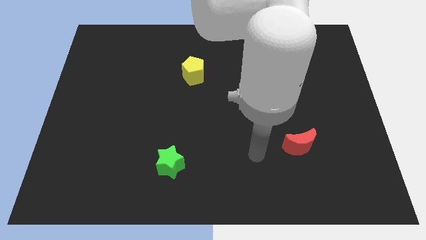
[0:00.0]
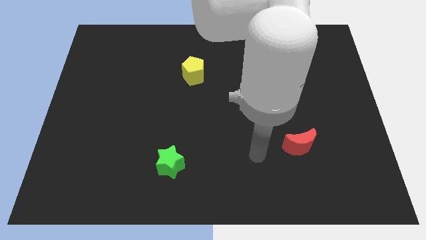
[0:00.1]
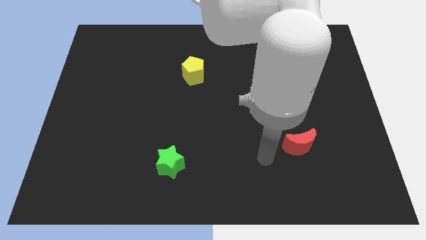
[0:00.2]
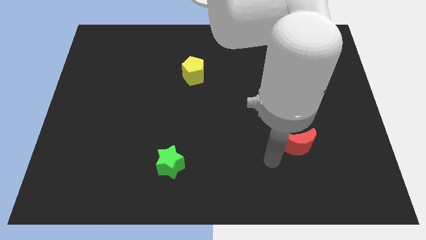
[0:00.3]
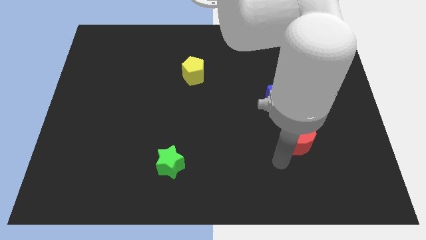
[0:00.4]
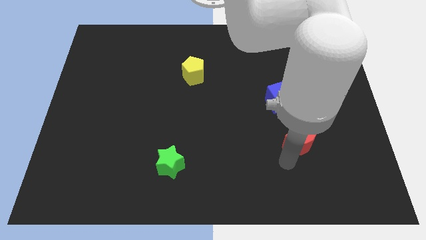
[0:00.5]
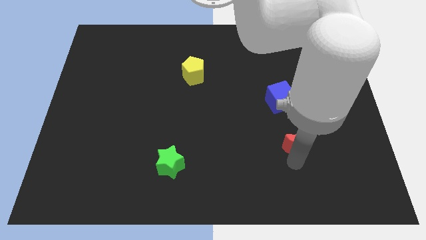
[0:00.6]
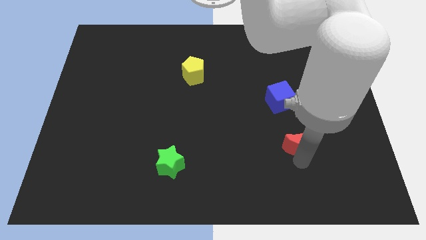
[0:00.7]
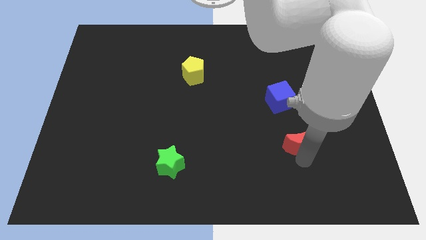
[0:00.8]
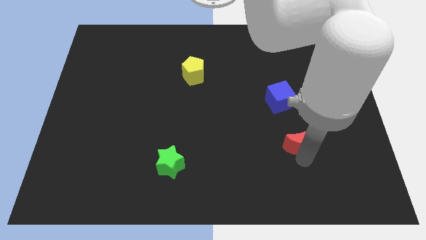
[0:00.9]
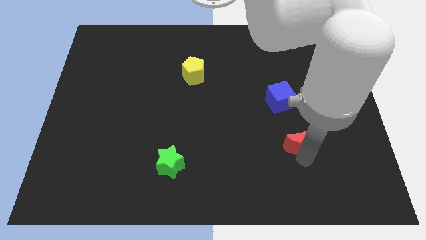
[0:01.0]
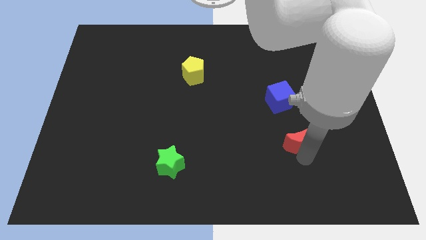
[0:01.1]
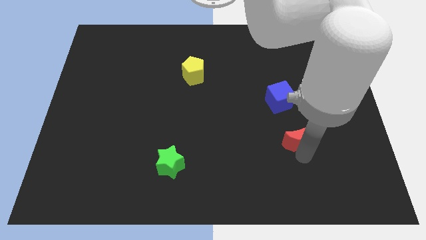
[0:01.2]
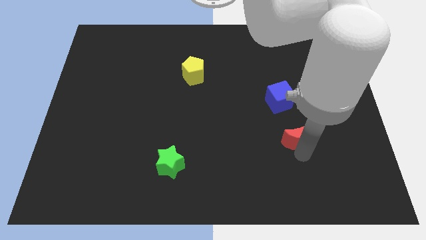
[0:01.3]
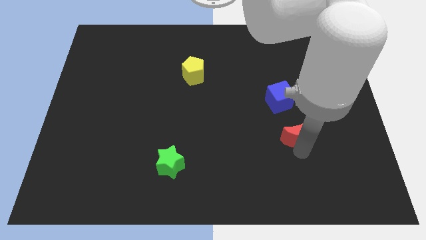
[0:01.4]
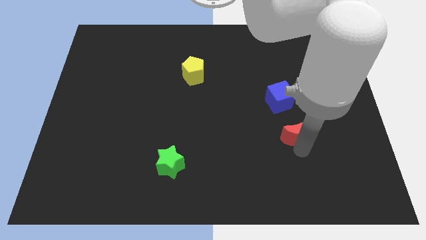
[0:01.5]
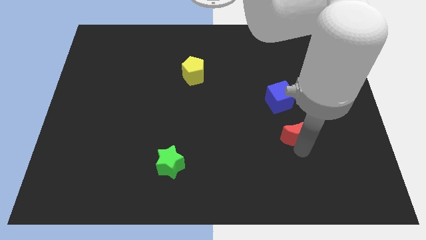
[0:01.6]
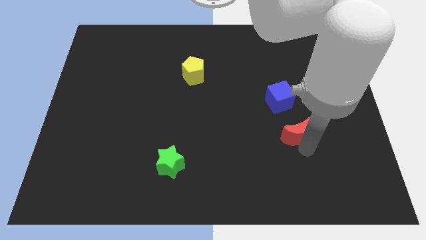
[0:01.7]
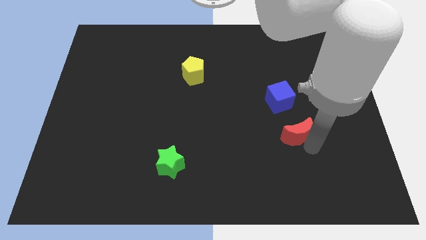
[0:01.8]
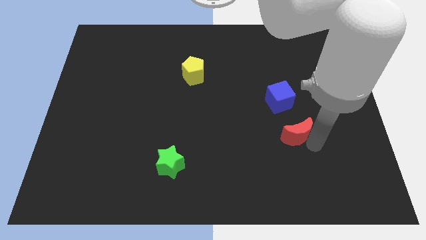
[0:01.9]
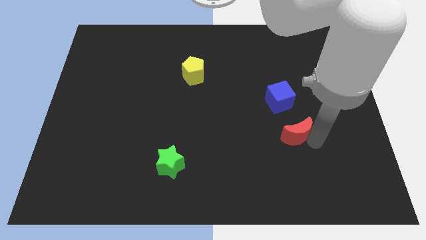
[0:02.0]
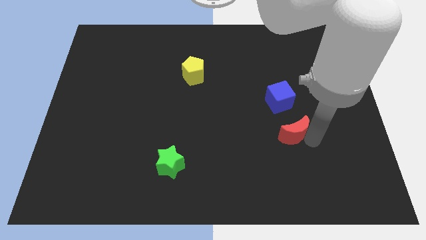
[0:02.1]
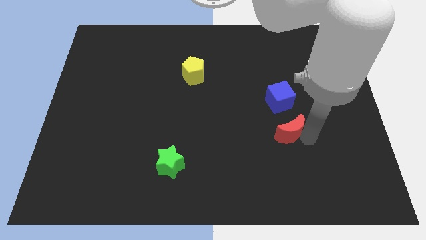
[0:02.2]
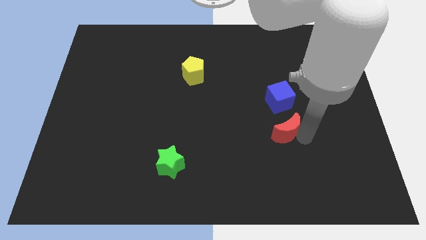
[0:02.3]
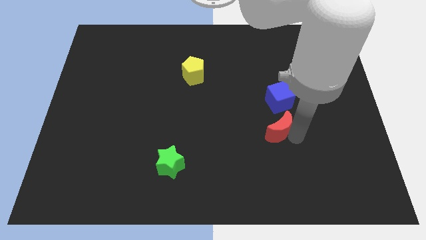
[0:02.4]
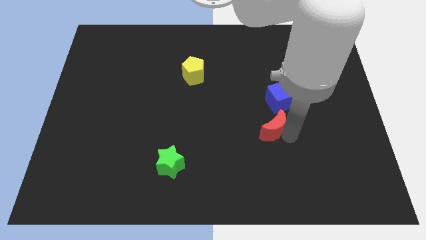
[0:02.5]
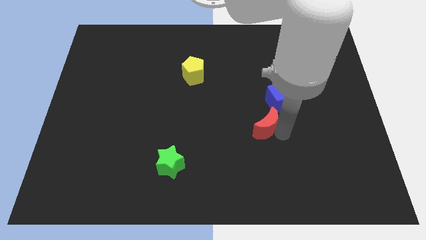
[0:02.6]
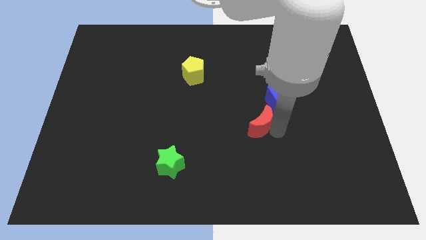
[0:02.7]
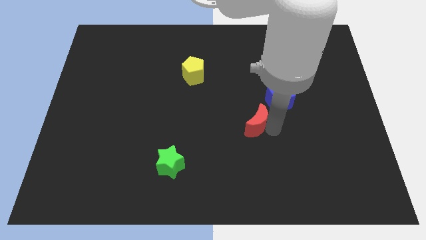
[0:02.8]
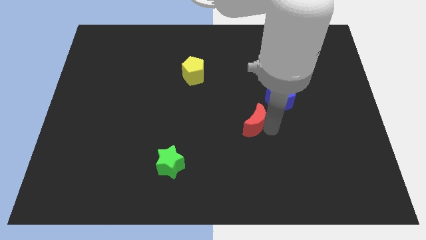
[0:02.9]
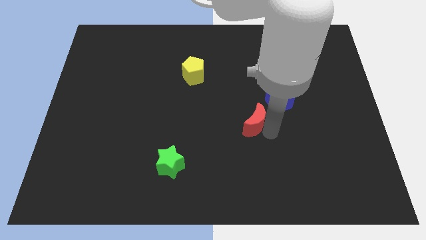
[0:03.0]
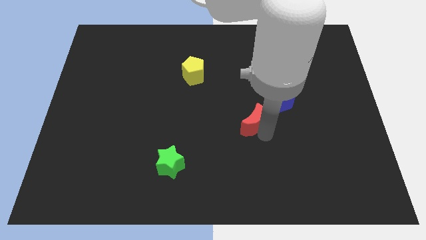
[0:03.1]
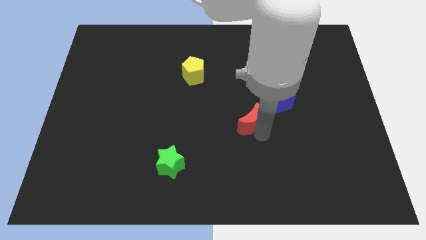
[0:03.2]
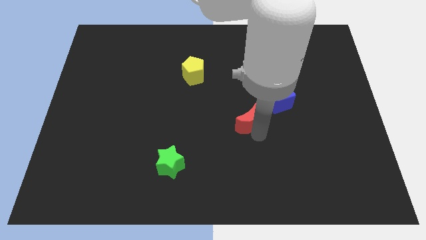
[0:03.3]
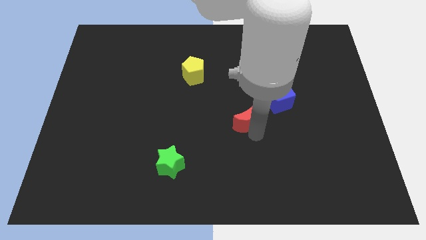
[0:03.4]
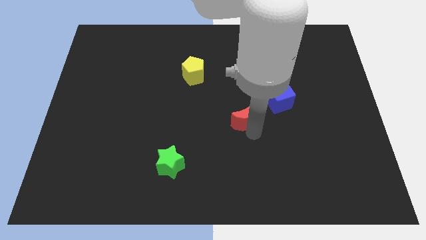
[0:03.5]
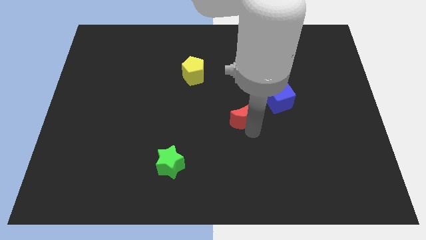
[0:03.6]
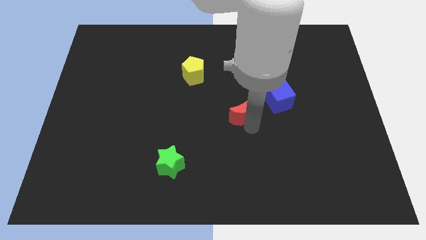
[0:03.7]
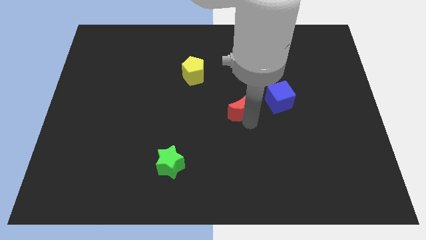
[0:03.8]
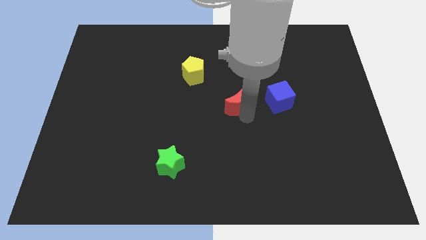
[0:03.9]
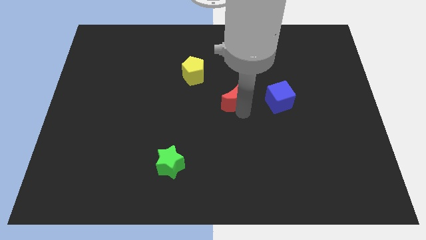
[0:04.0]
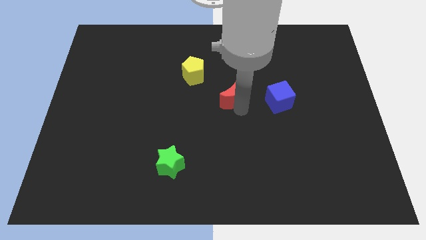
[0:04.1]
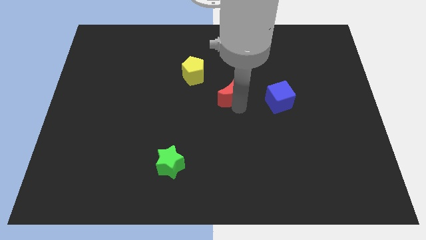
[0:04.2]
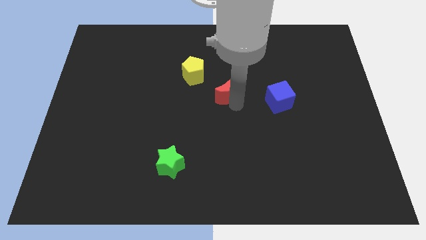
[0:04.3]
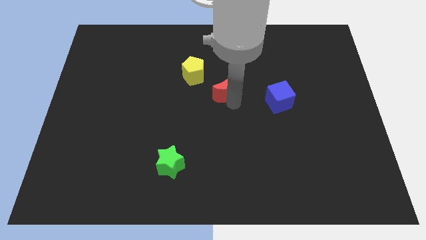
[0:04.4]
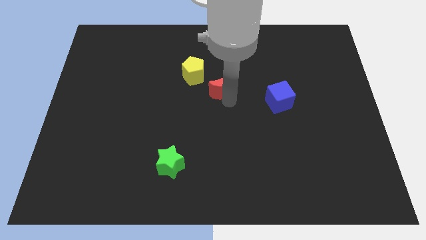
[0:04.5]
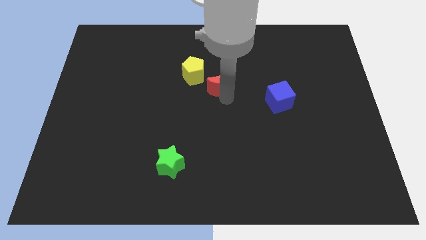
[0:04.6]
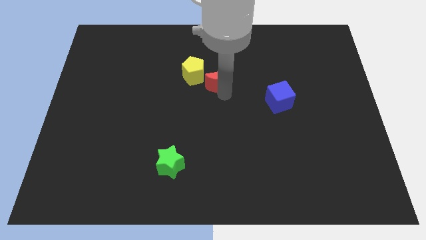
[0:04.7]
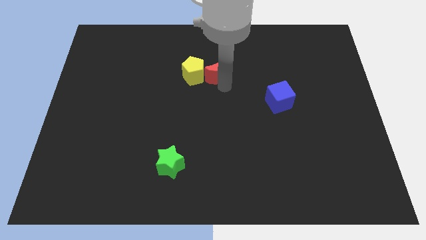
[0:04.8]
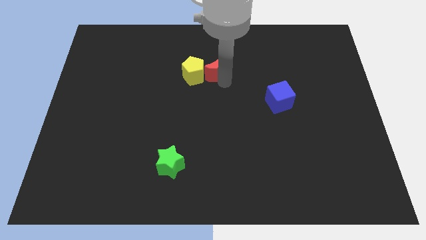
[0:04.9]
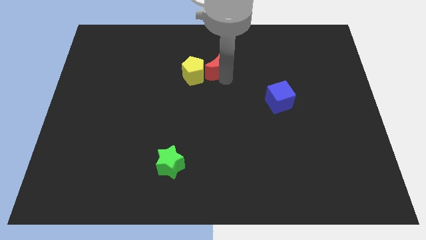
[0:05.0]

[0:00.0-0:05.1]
put the moon close to the yellow block

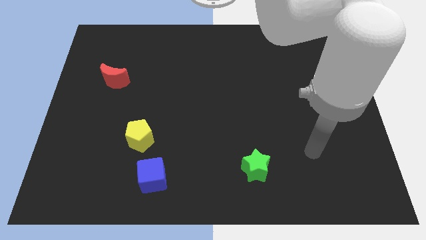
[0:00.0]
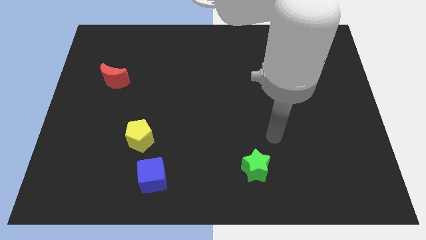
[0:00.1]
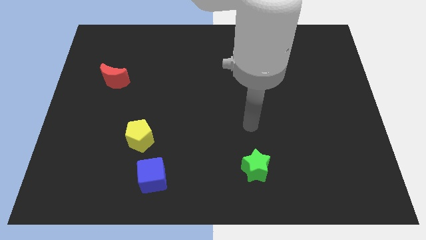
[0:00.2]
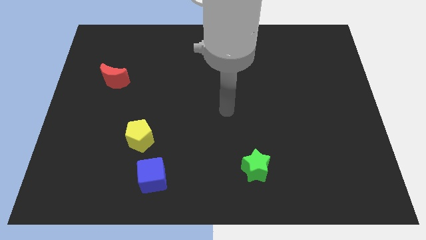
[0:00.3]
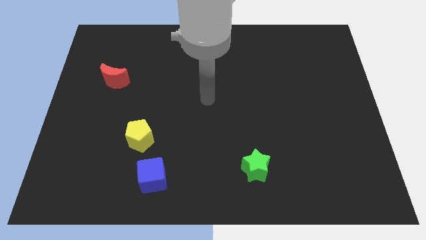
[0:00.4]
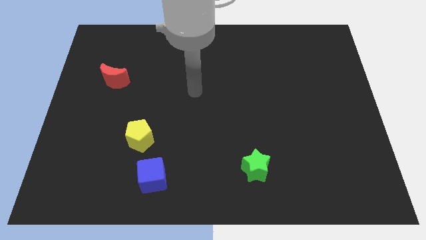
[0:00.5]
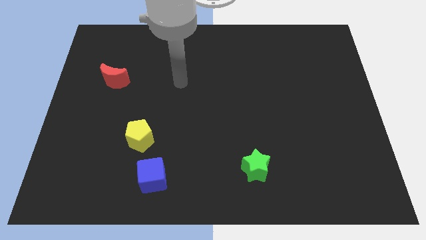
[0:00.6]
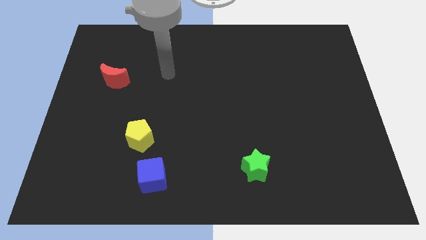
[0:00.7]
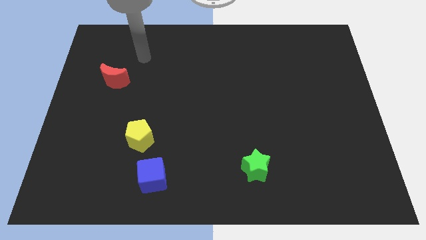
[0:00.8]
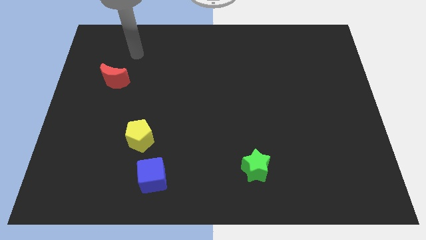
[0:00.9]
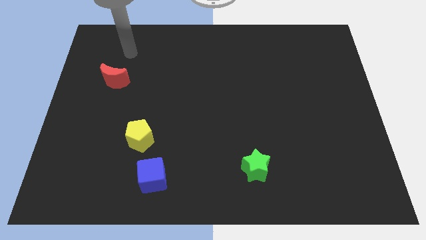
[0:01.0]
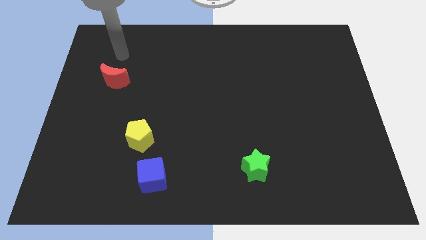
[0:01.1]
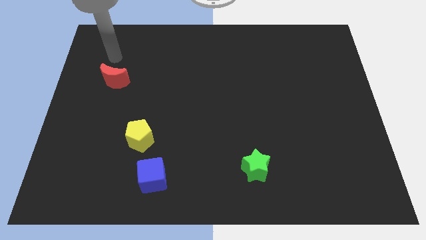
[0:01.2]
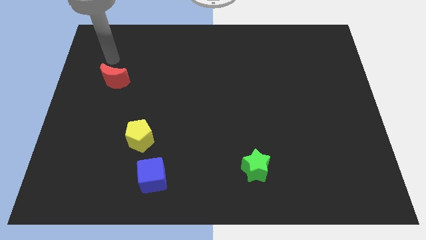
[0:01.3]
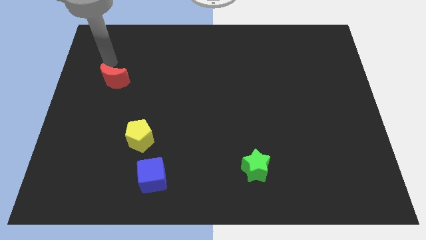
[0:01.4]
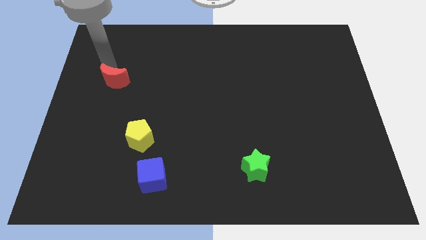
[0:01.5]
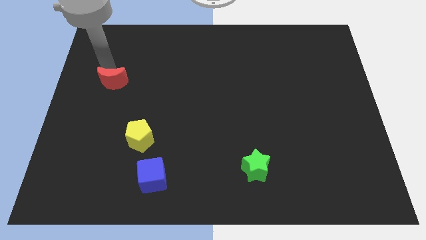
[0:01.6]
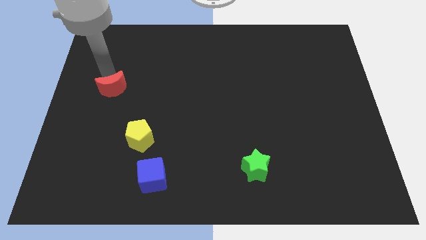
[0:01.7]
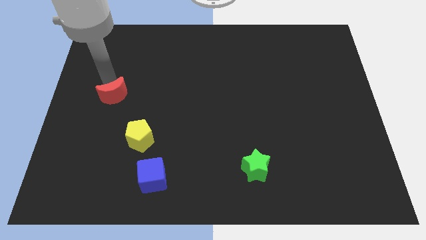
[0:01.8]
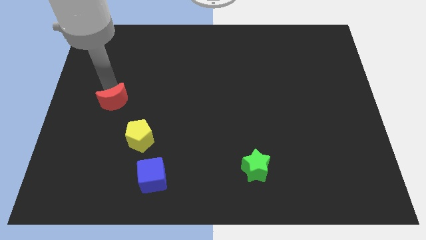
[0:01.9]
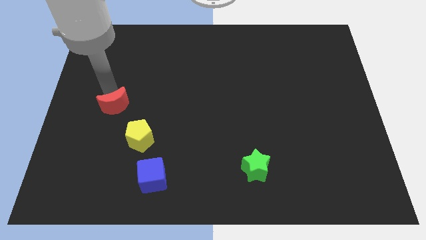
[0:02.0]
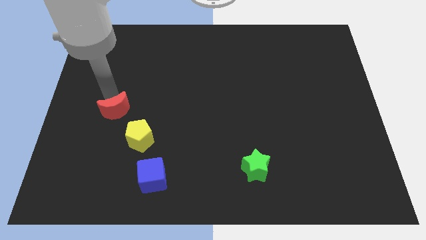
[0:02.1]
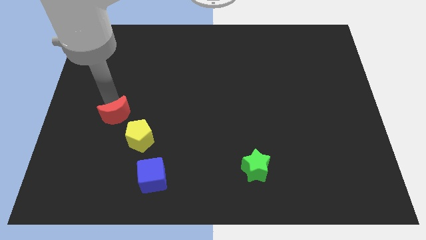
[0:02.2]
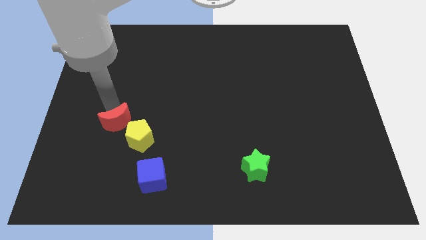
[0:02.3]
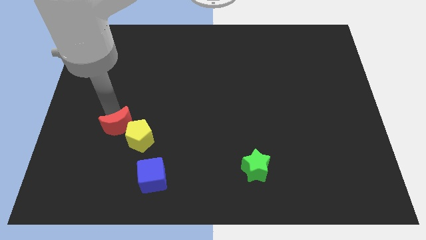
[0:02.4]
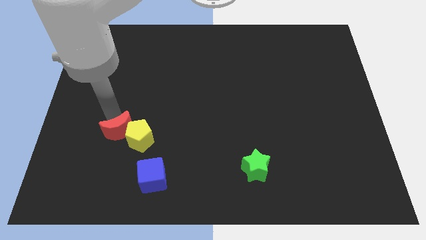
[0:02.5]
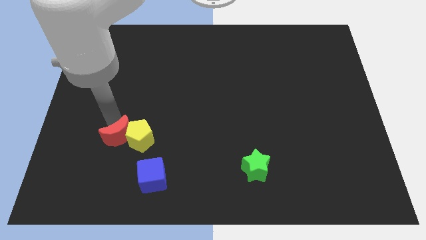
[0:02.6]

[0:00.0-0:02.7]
push the red moon next to the yellow block

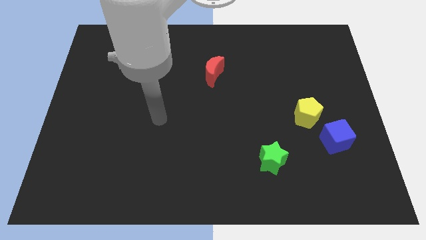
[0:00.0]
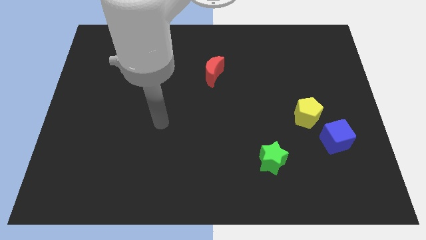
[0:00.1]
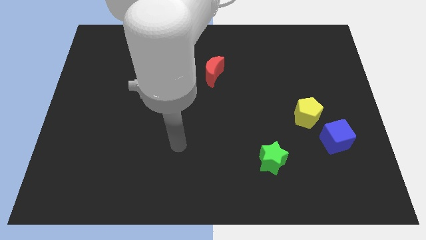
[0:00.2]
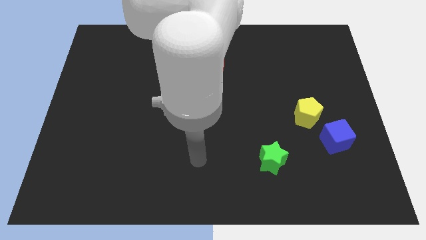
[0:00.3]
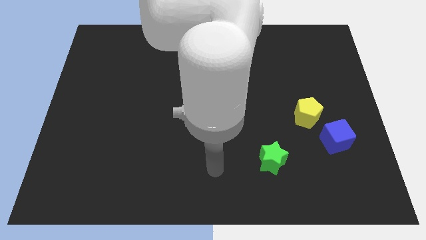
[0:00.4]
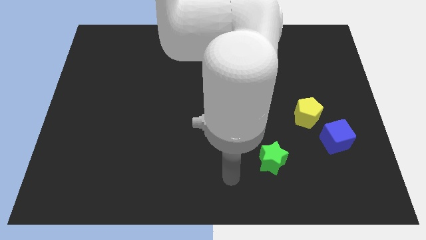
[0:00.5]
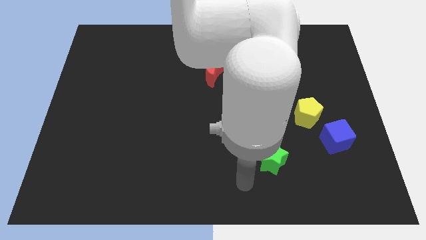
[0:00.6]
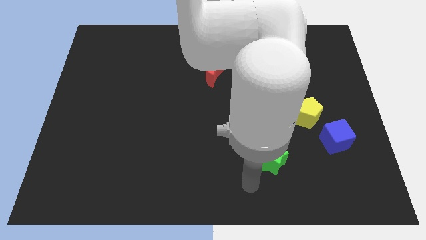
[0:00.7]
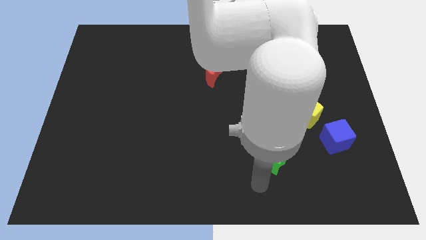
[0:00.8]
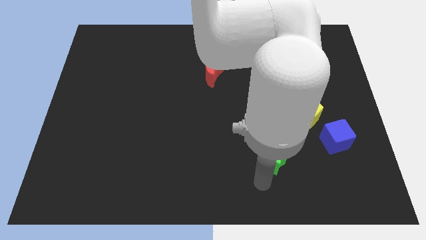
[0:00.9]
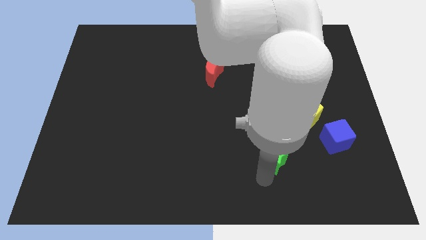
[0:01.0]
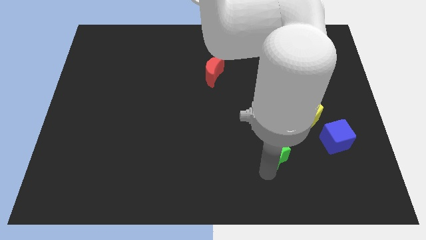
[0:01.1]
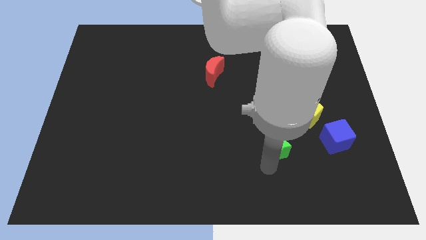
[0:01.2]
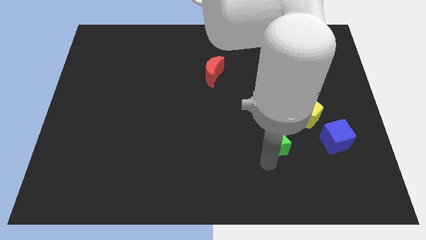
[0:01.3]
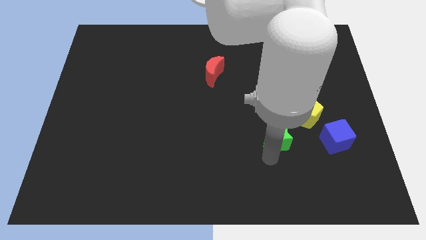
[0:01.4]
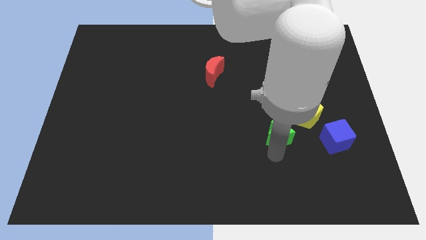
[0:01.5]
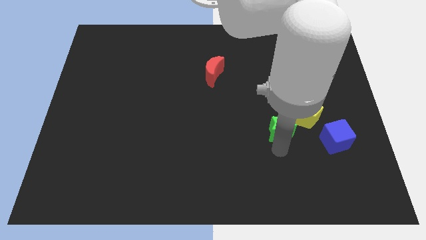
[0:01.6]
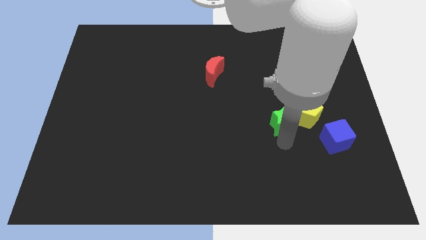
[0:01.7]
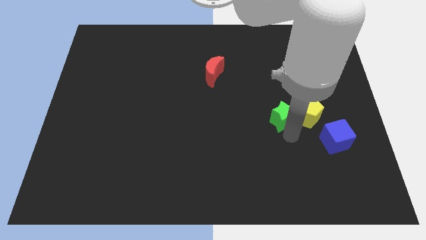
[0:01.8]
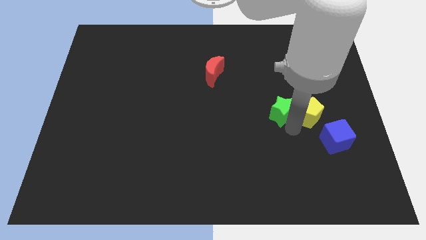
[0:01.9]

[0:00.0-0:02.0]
put the green star close to the yellow pentagon
